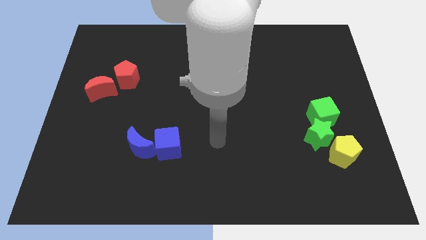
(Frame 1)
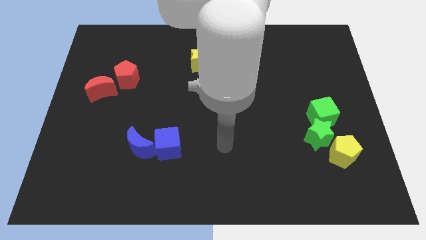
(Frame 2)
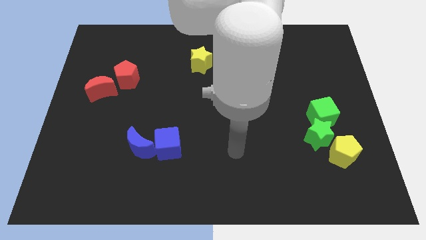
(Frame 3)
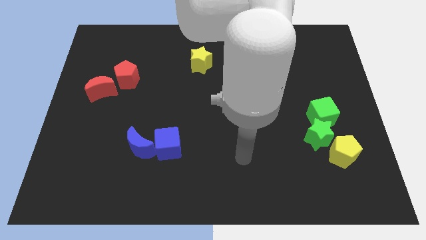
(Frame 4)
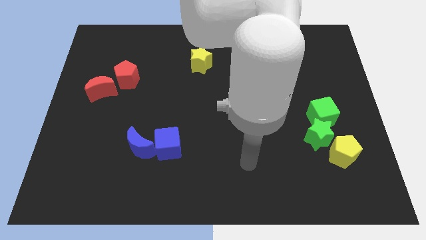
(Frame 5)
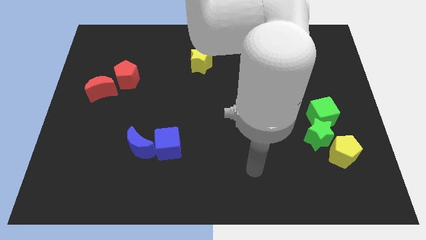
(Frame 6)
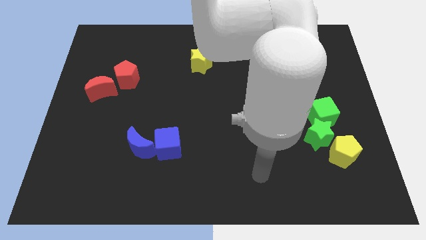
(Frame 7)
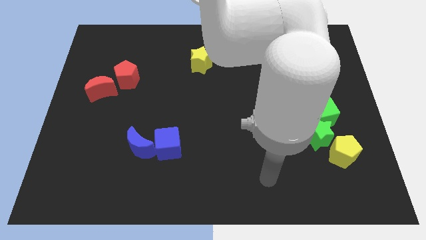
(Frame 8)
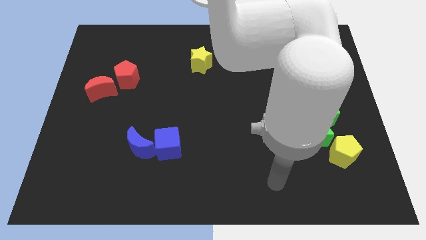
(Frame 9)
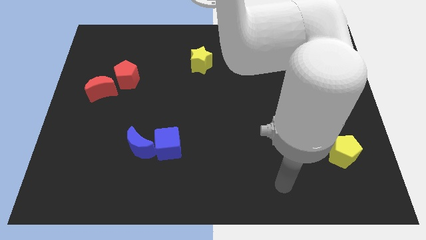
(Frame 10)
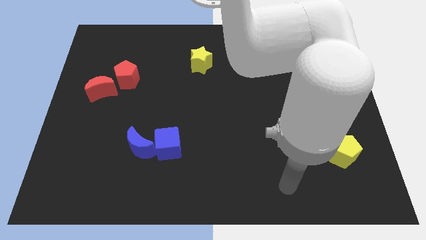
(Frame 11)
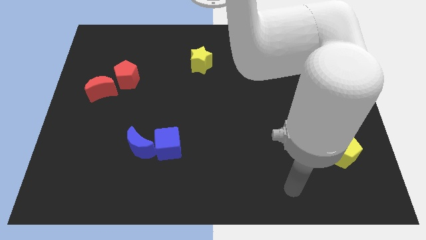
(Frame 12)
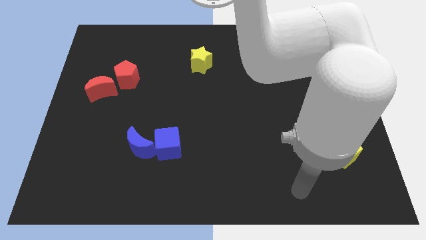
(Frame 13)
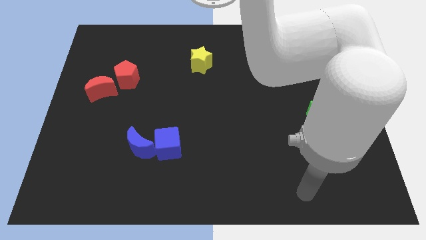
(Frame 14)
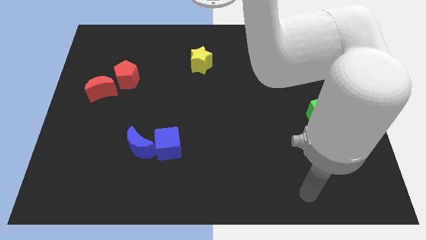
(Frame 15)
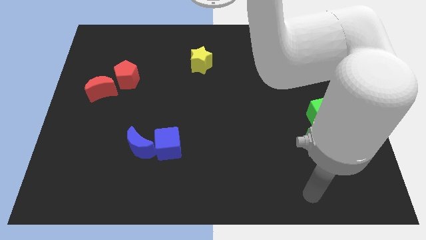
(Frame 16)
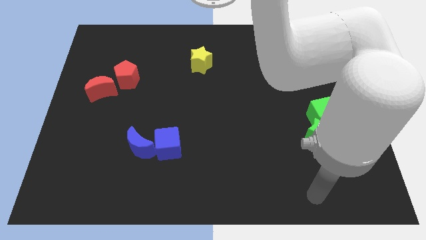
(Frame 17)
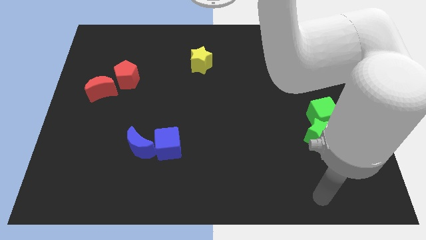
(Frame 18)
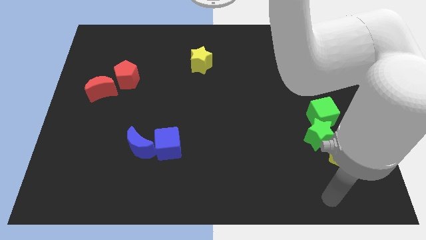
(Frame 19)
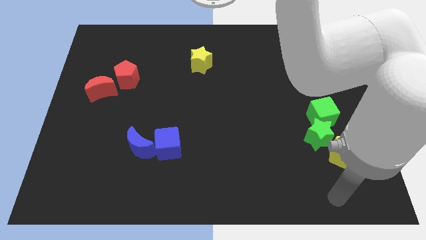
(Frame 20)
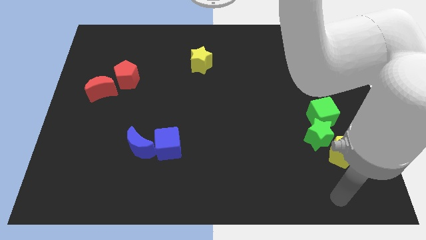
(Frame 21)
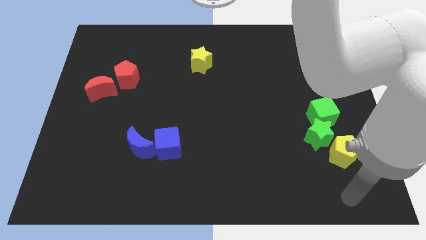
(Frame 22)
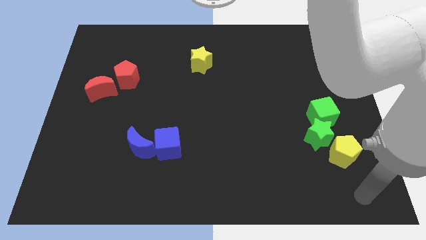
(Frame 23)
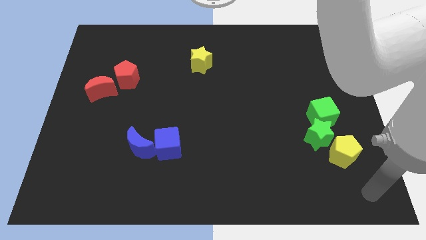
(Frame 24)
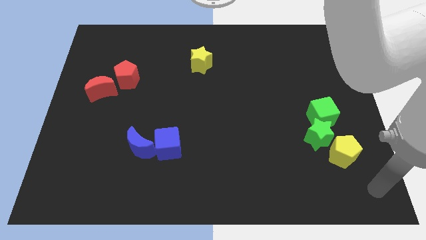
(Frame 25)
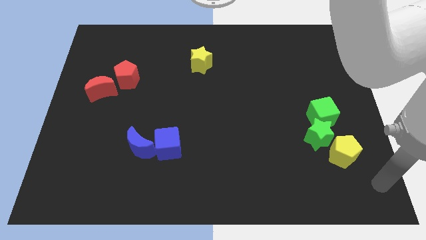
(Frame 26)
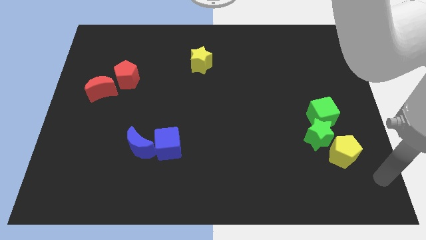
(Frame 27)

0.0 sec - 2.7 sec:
move the arm to the bottom right side of the yellow pentagon

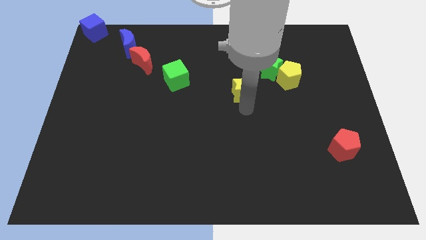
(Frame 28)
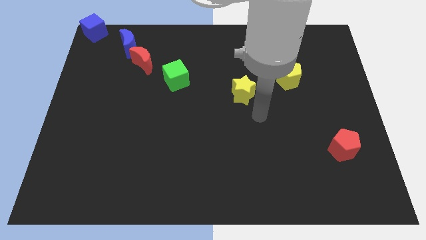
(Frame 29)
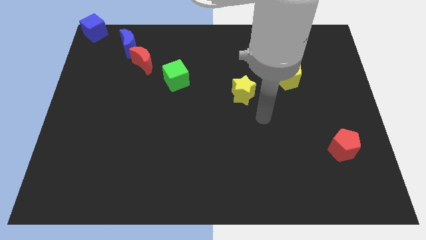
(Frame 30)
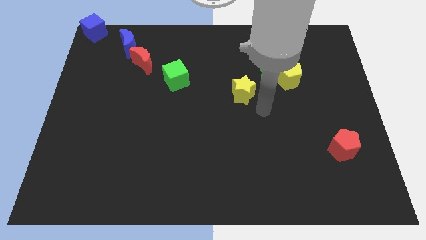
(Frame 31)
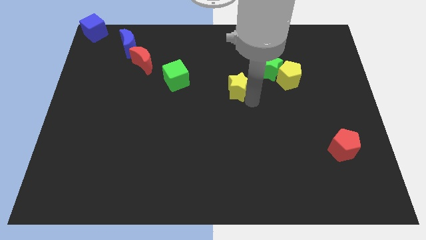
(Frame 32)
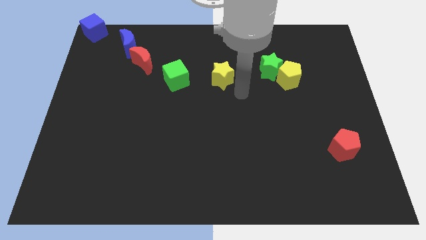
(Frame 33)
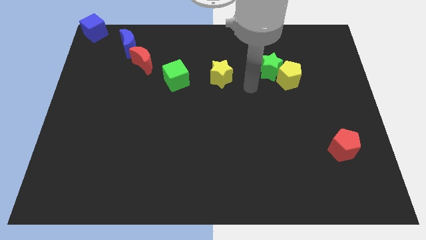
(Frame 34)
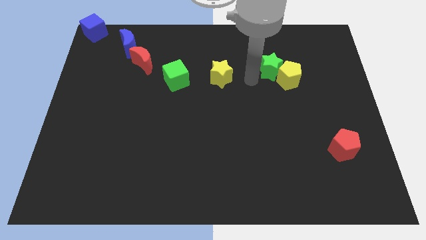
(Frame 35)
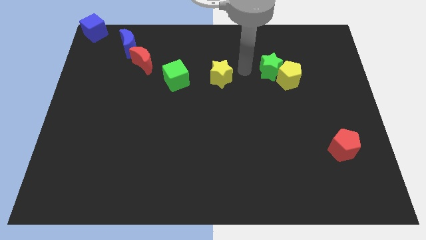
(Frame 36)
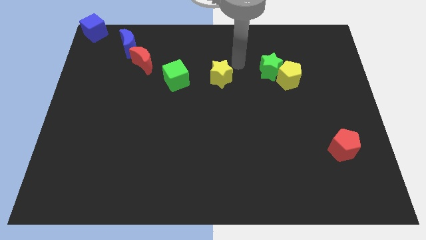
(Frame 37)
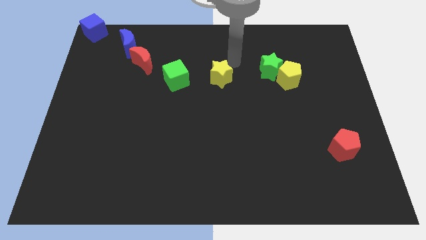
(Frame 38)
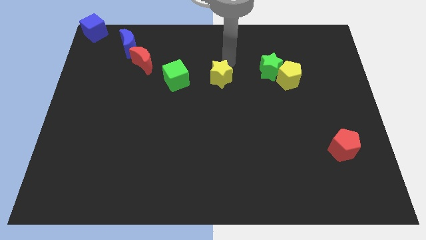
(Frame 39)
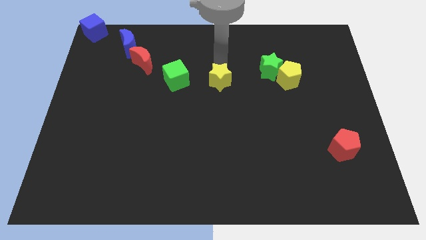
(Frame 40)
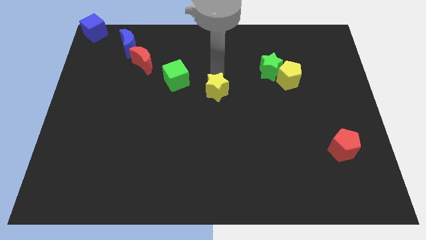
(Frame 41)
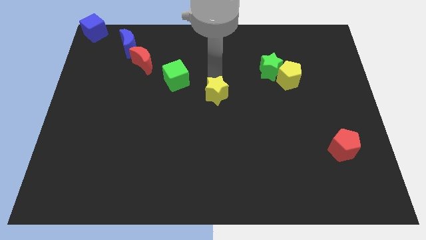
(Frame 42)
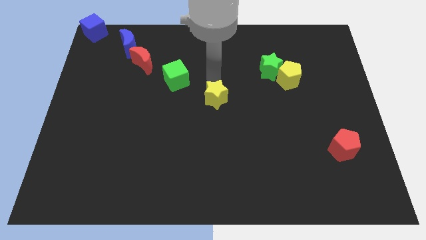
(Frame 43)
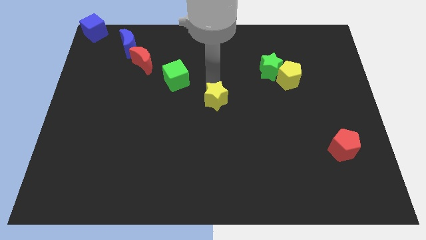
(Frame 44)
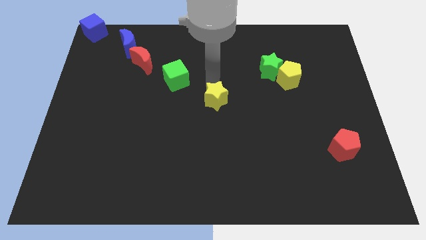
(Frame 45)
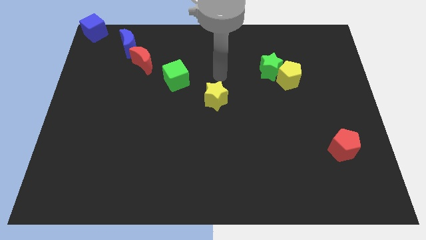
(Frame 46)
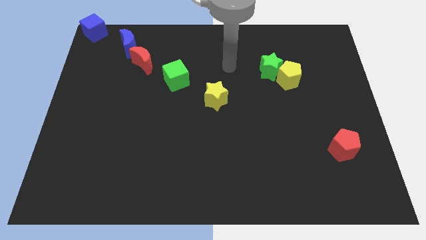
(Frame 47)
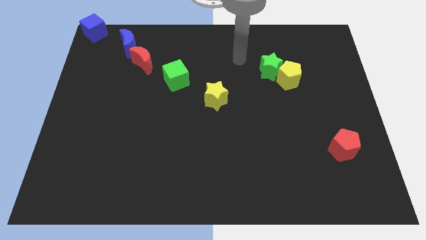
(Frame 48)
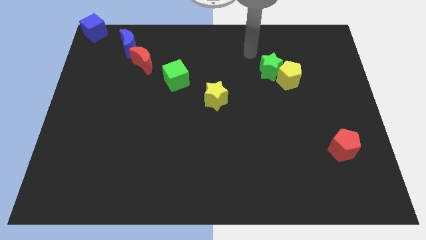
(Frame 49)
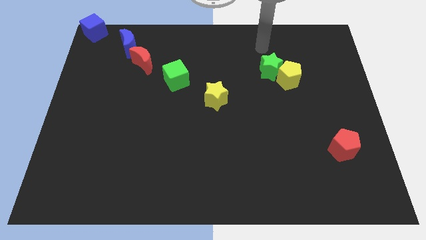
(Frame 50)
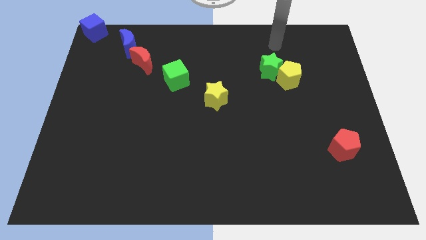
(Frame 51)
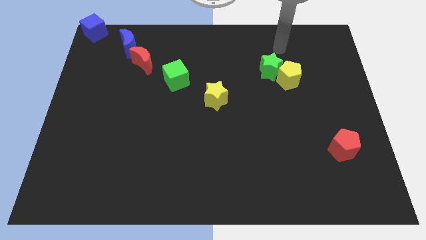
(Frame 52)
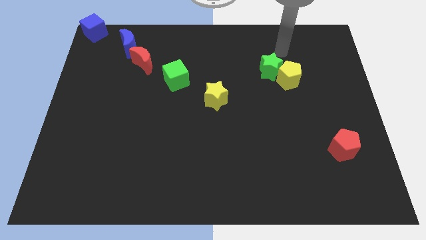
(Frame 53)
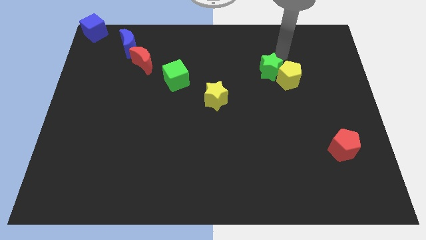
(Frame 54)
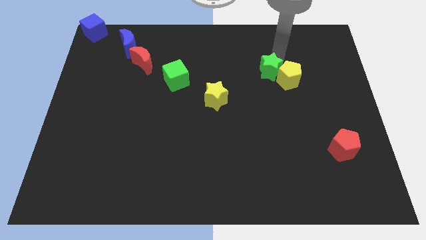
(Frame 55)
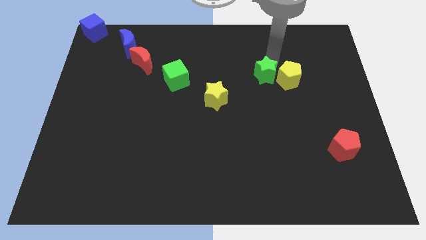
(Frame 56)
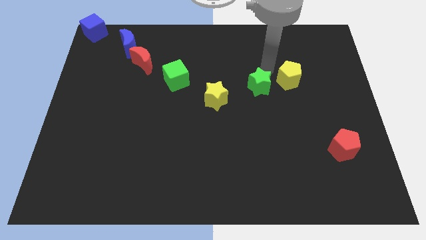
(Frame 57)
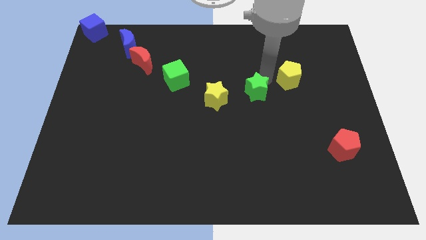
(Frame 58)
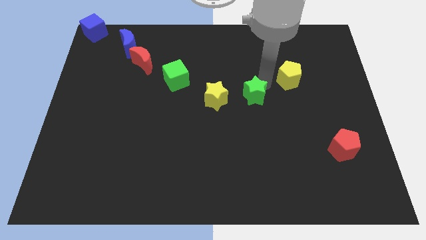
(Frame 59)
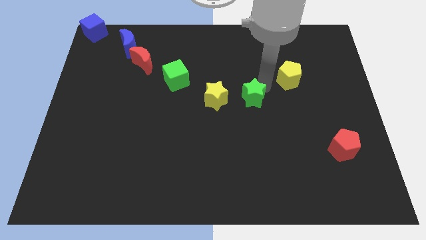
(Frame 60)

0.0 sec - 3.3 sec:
place the green star to the right of the yellow star

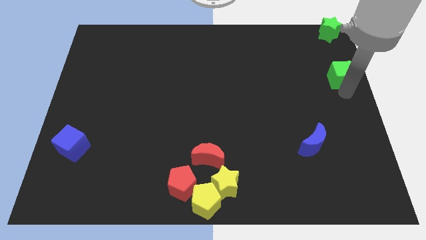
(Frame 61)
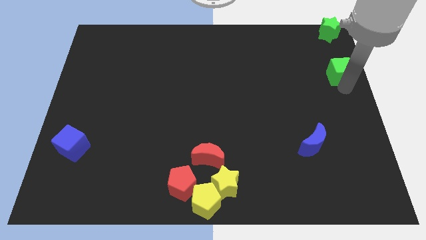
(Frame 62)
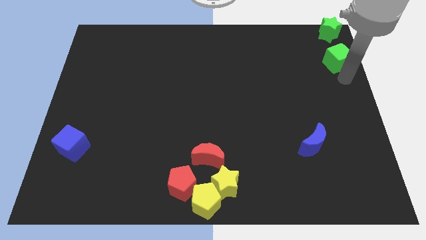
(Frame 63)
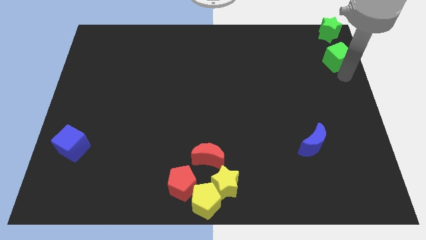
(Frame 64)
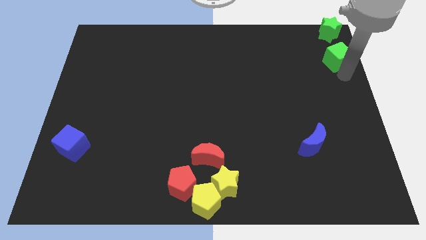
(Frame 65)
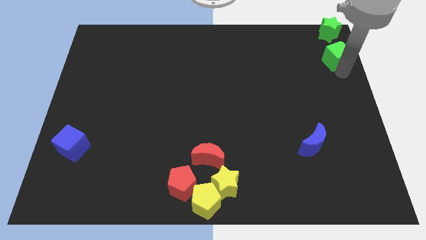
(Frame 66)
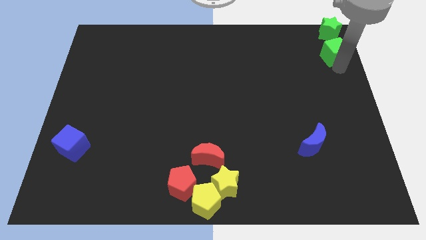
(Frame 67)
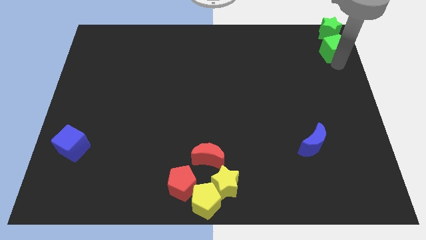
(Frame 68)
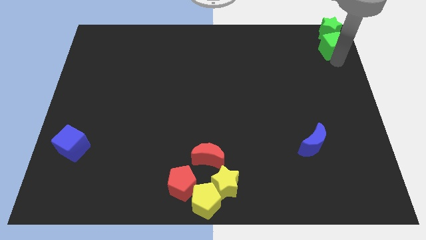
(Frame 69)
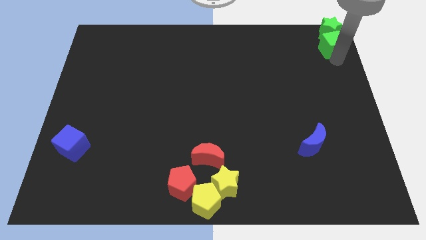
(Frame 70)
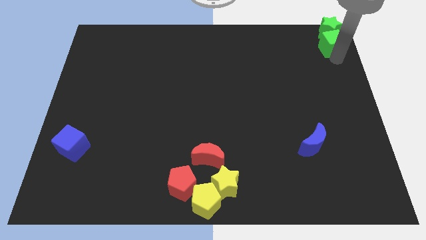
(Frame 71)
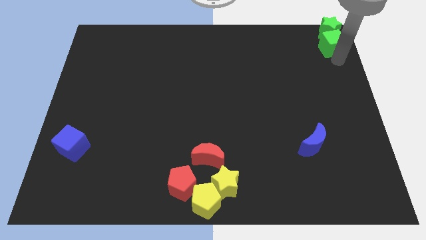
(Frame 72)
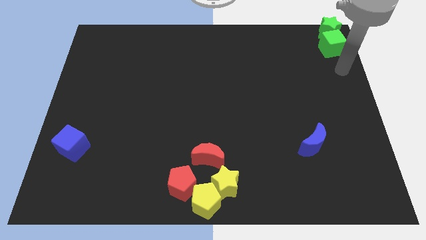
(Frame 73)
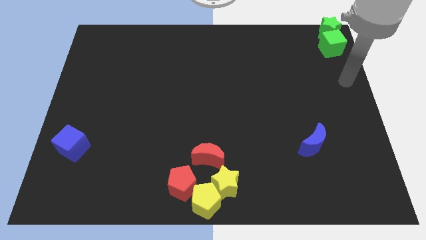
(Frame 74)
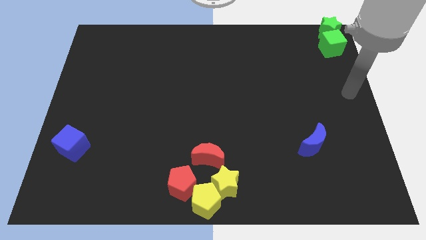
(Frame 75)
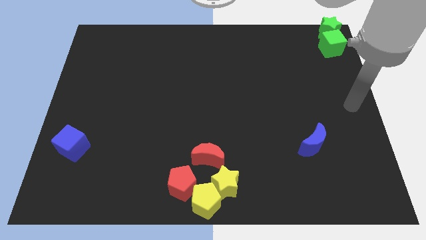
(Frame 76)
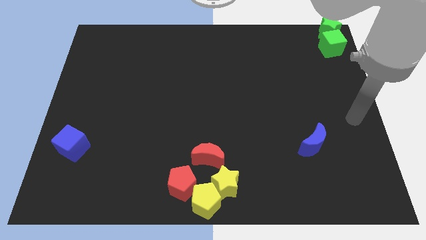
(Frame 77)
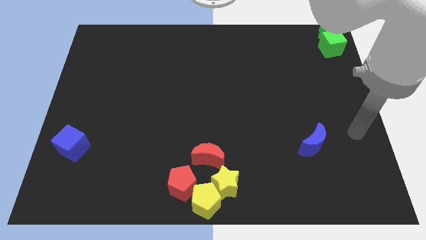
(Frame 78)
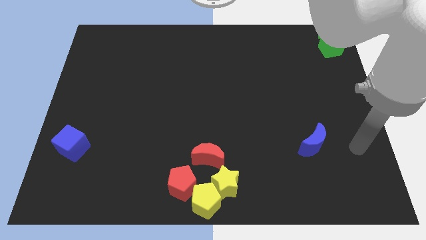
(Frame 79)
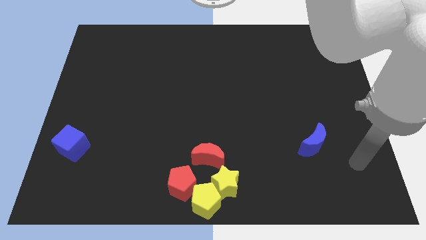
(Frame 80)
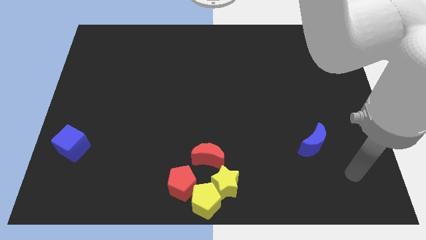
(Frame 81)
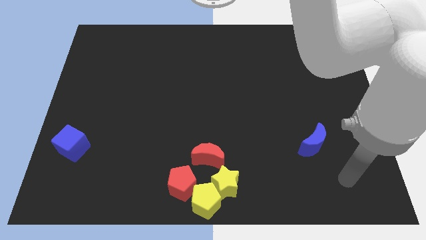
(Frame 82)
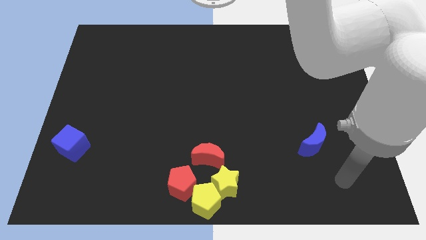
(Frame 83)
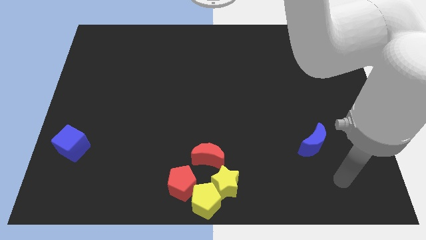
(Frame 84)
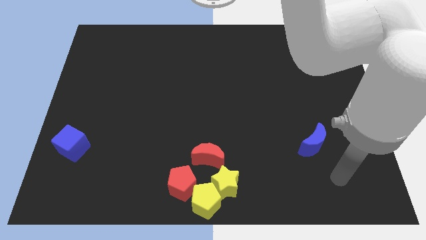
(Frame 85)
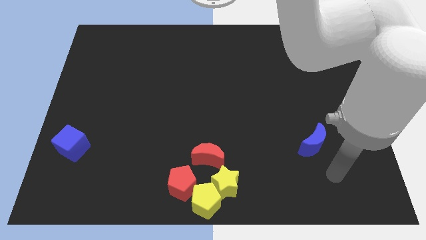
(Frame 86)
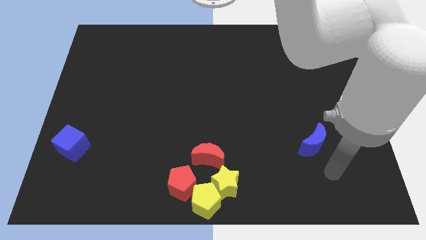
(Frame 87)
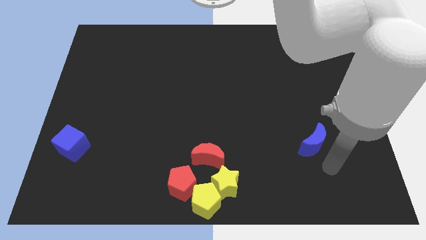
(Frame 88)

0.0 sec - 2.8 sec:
move the green cube into the bottom side of the green star
